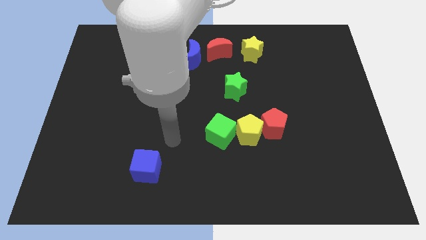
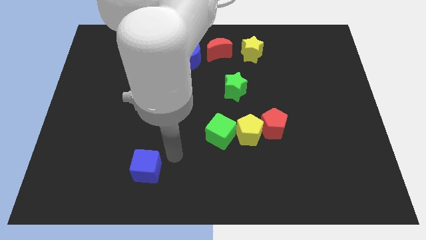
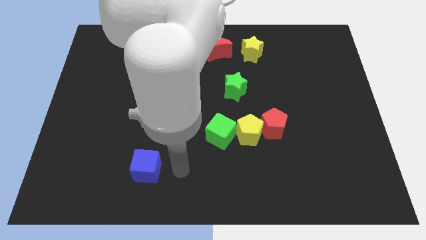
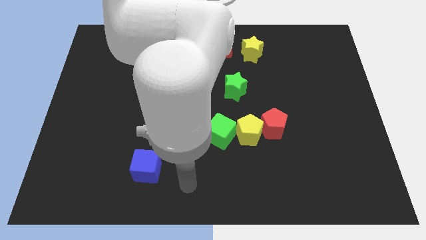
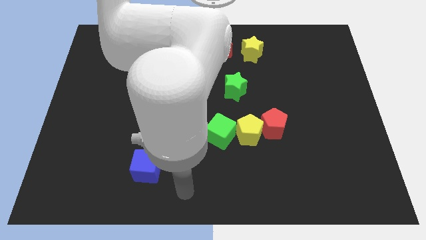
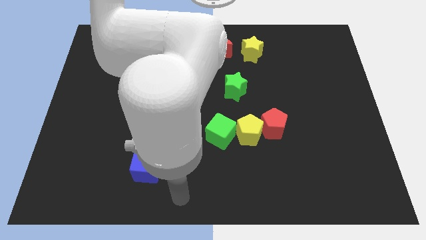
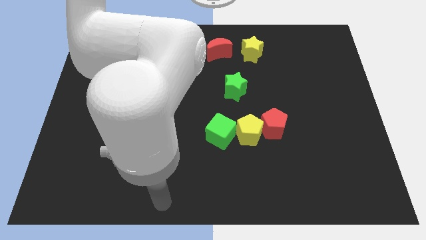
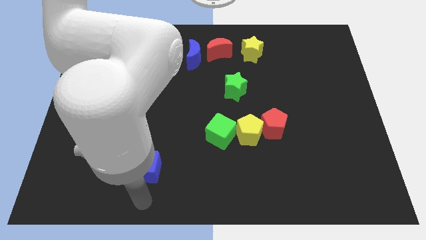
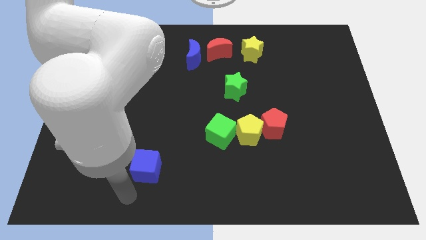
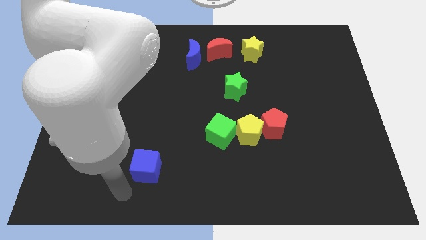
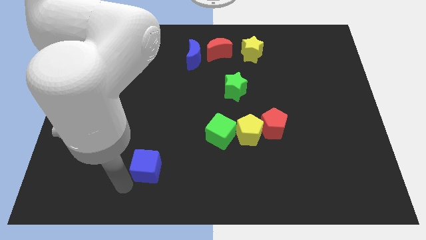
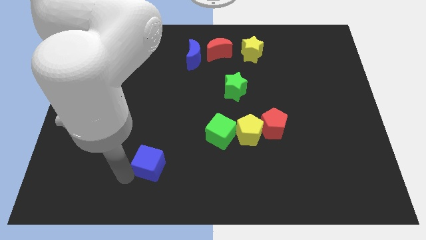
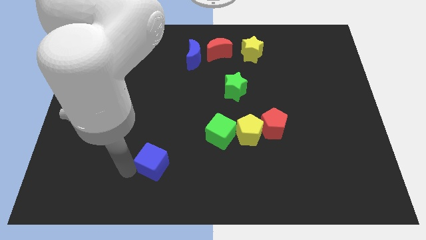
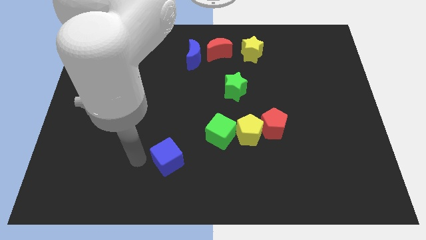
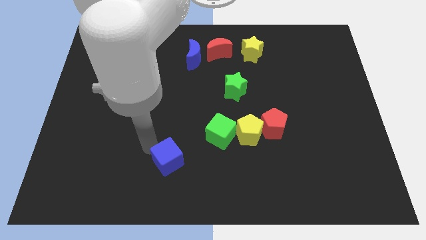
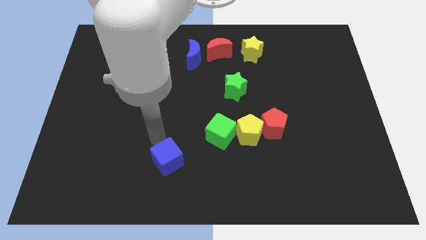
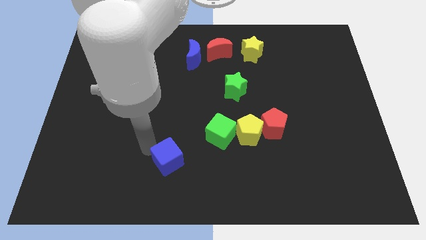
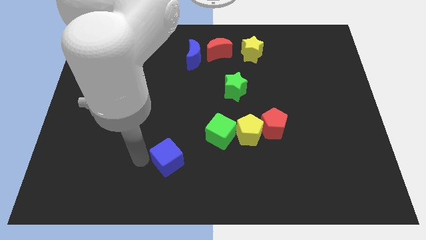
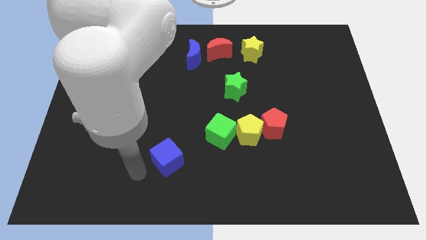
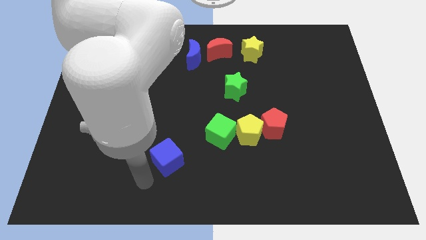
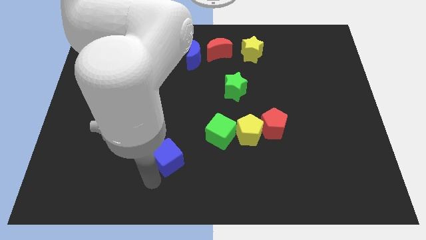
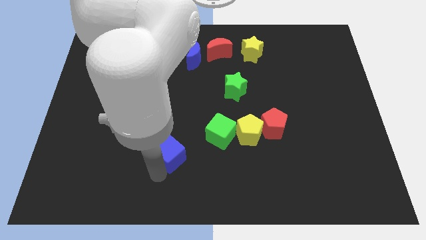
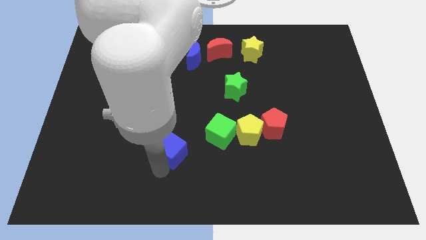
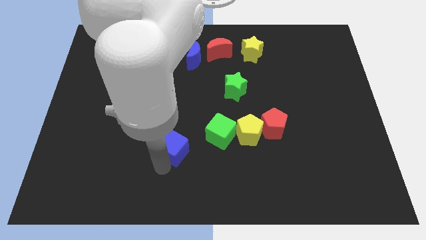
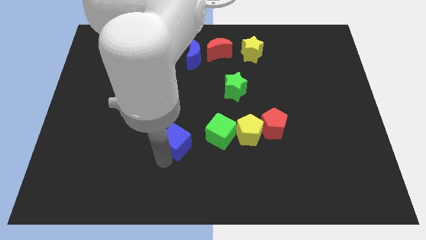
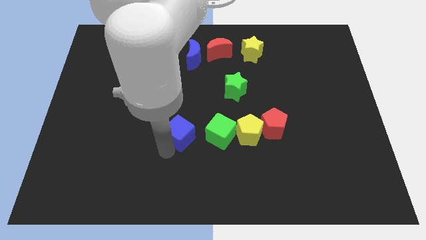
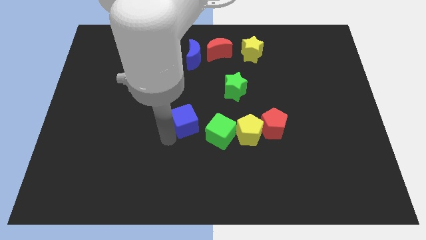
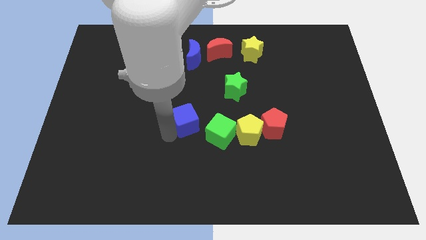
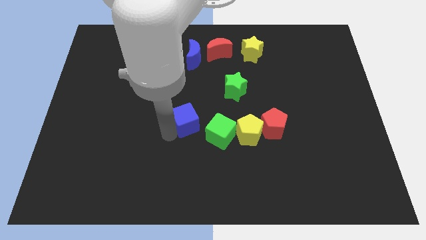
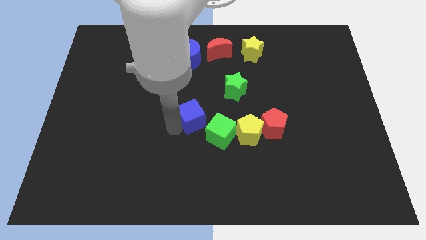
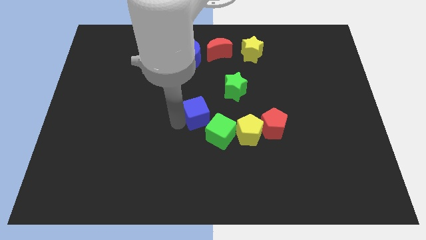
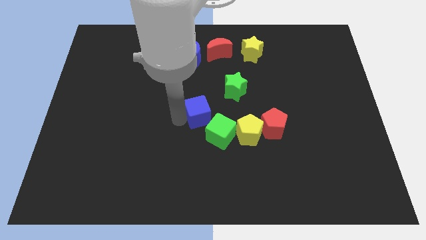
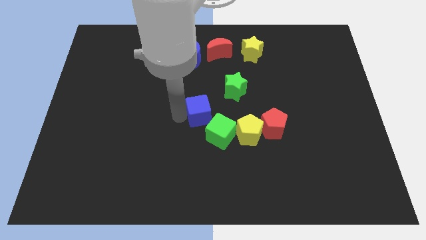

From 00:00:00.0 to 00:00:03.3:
move the blue cube slightly towards the center of the board

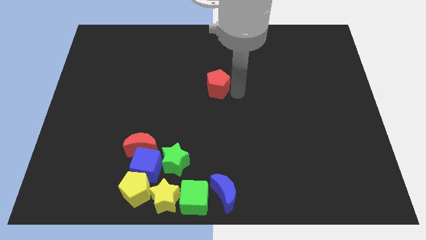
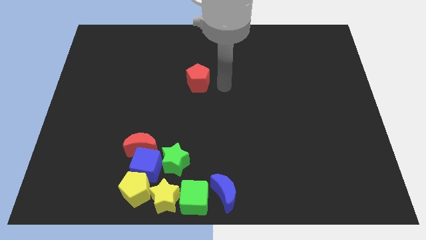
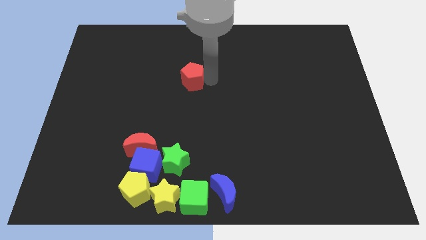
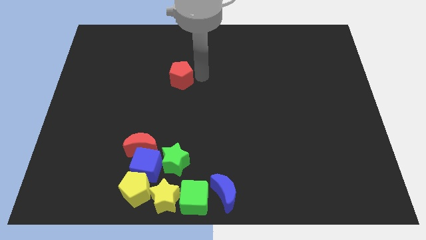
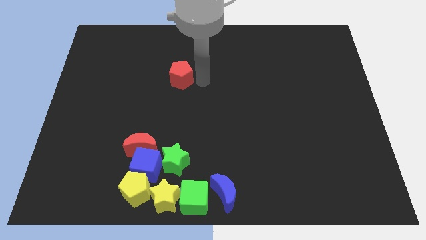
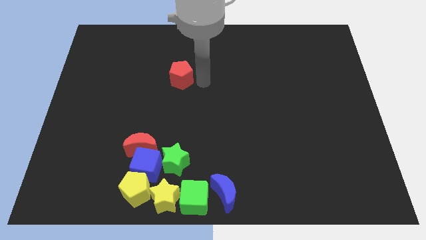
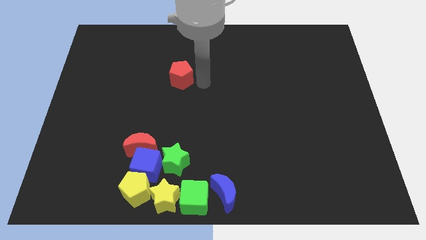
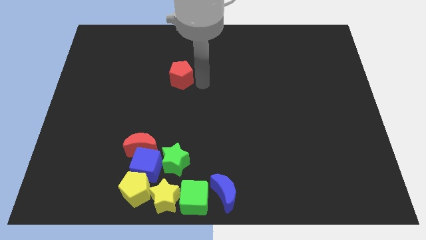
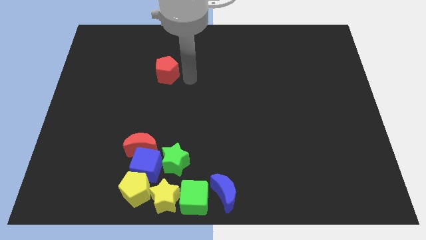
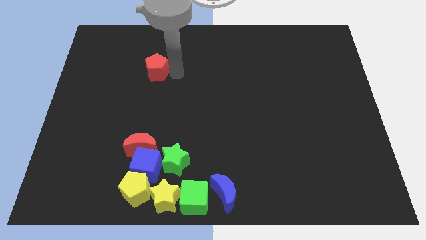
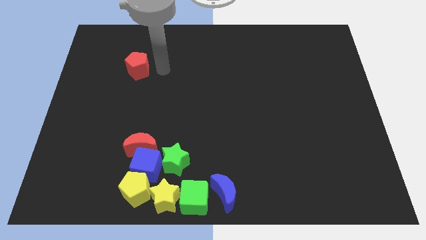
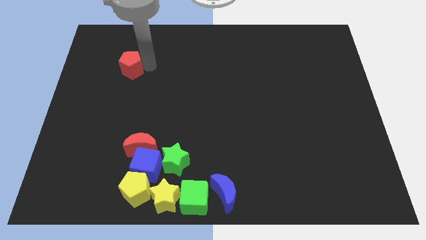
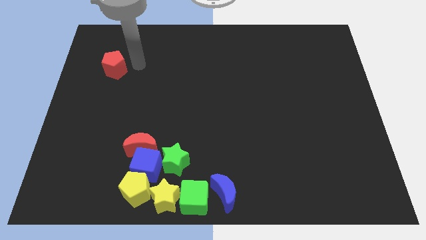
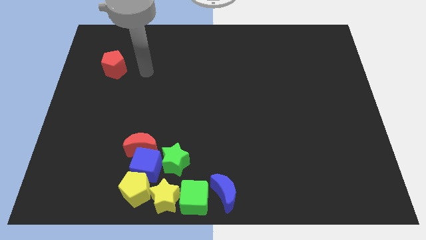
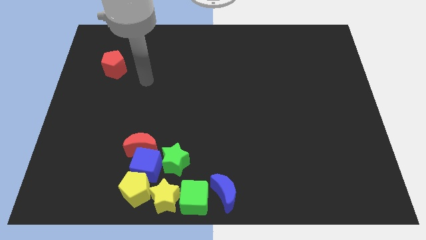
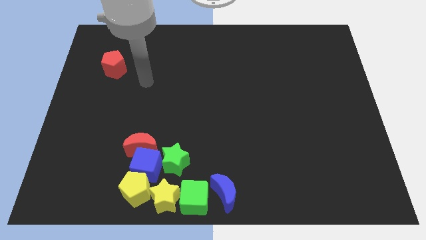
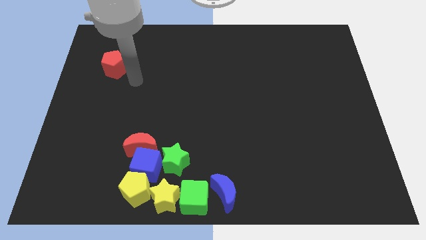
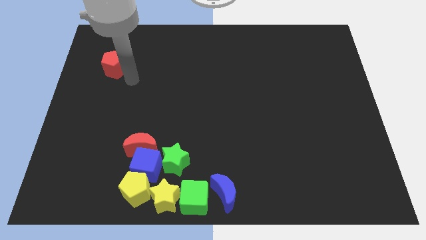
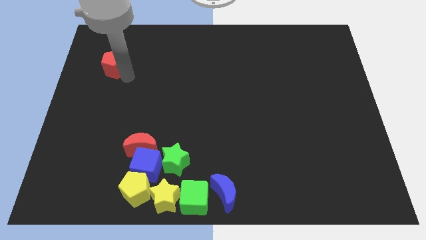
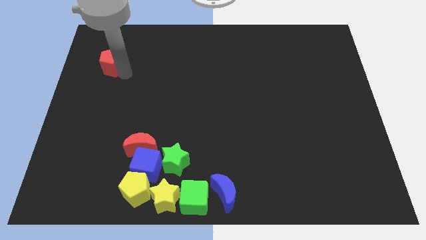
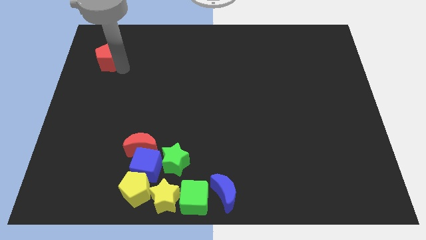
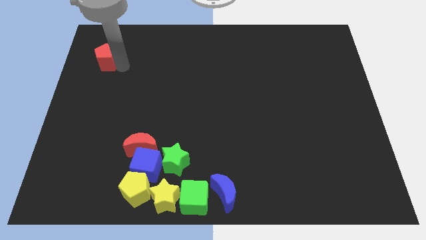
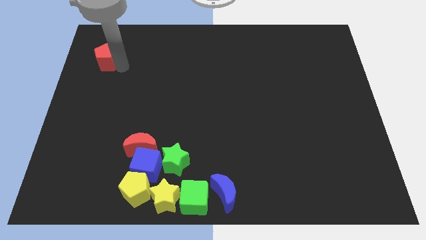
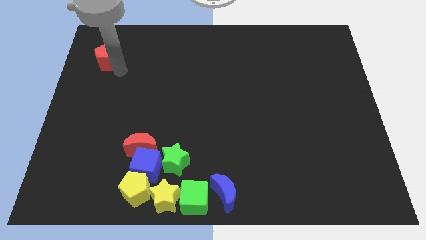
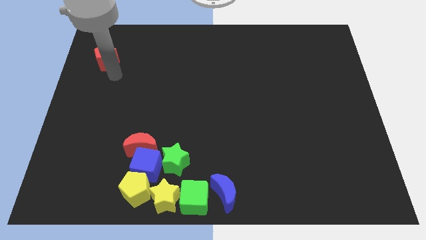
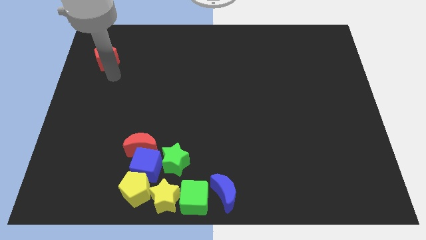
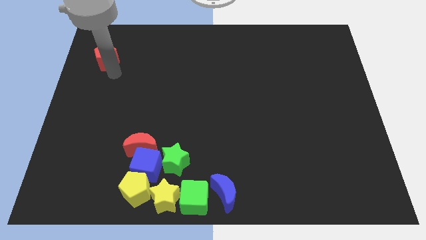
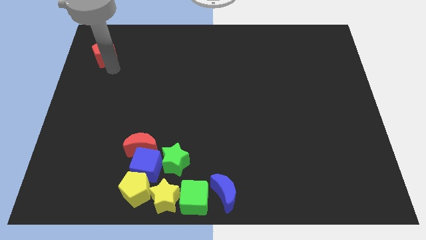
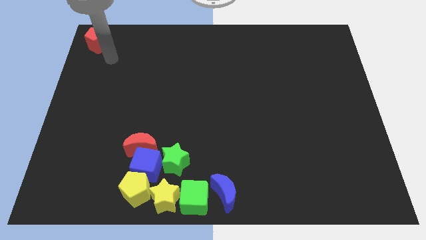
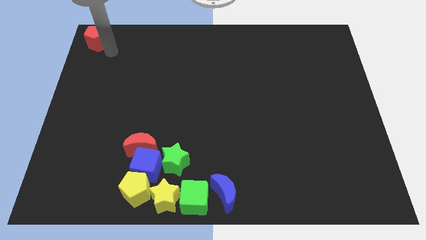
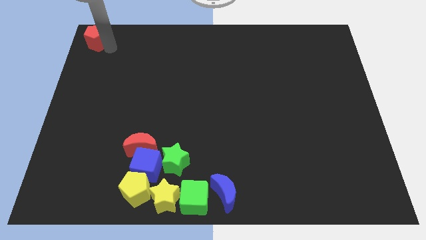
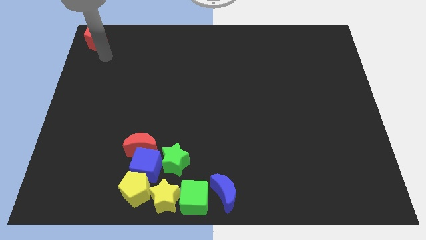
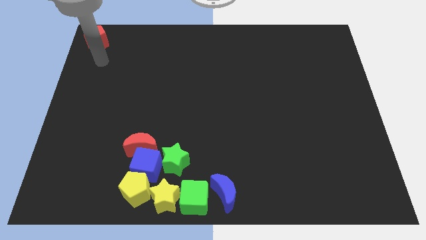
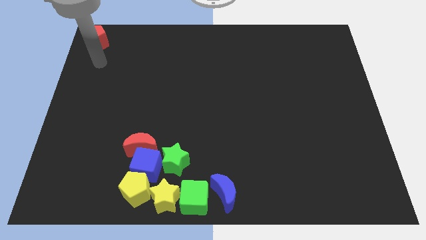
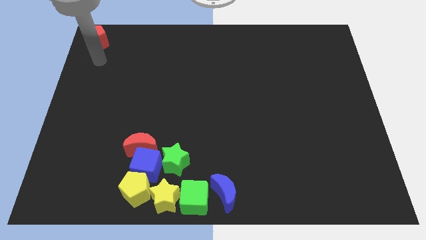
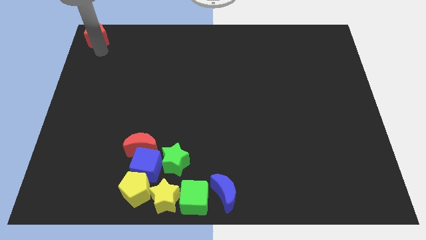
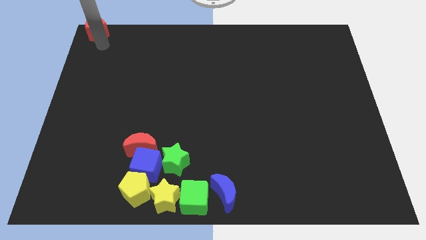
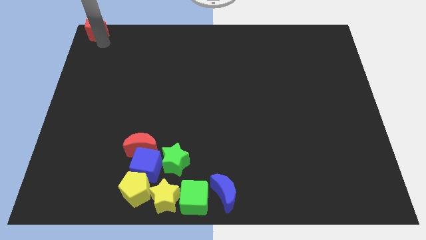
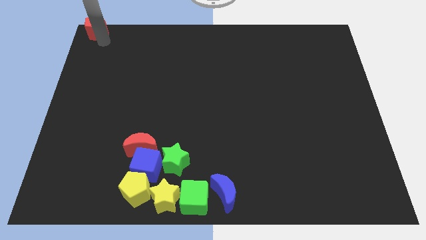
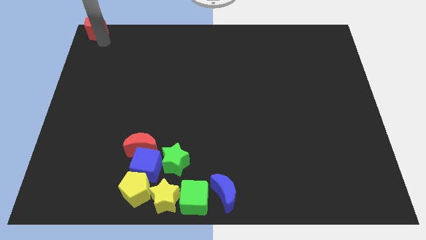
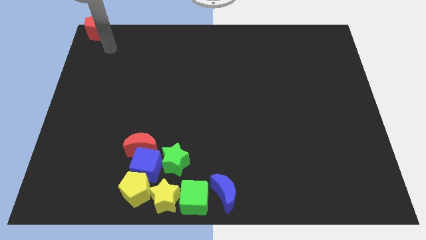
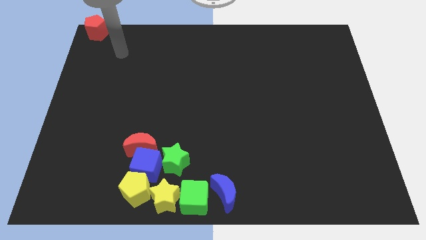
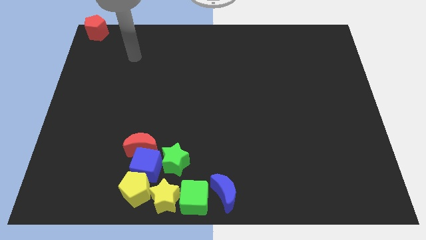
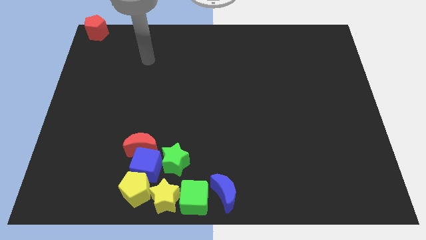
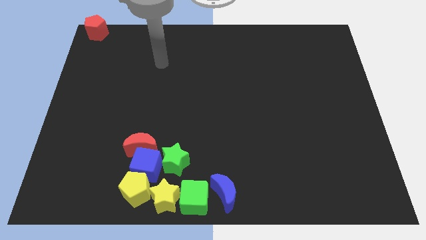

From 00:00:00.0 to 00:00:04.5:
place the red pentagon at the top left corner

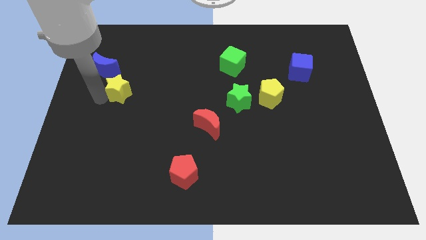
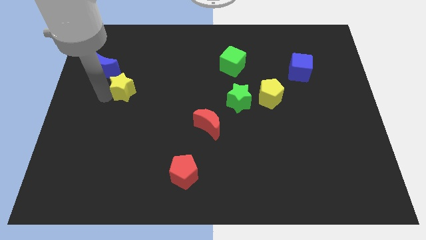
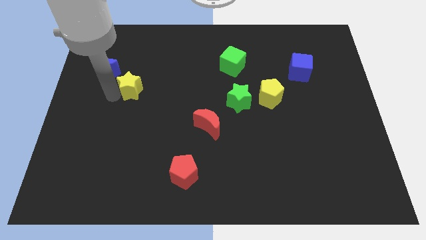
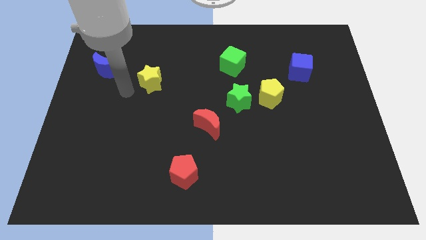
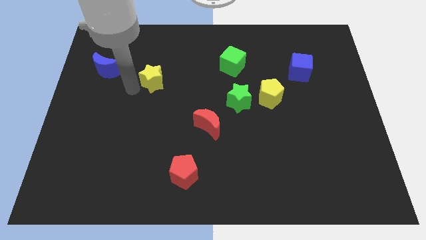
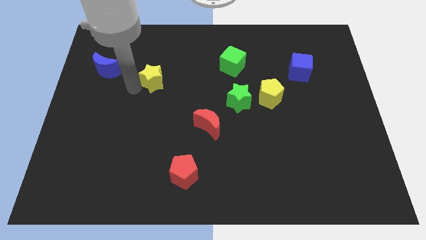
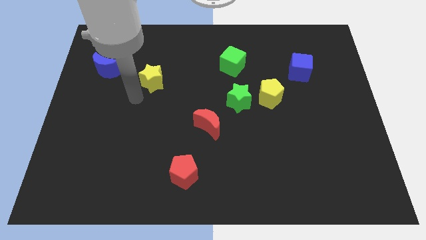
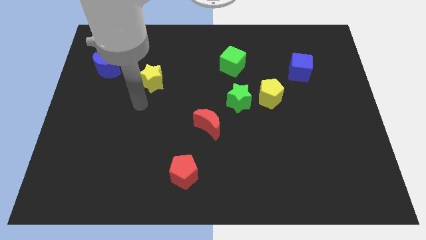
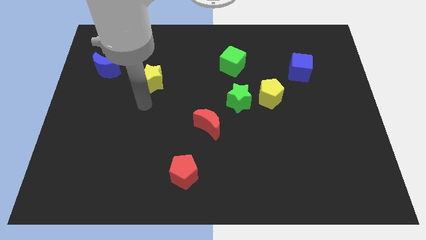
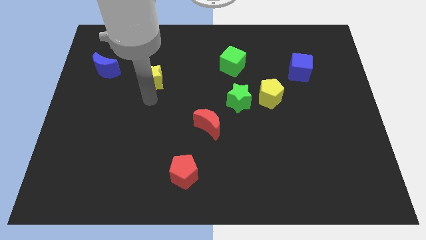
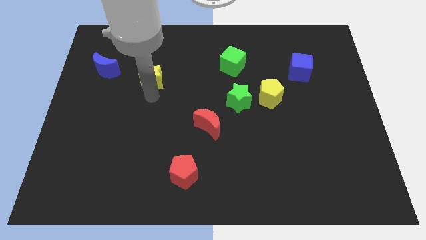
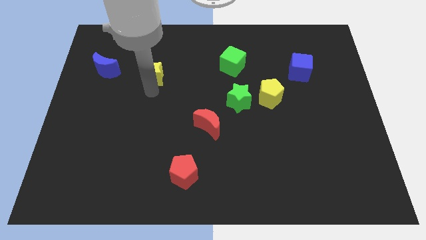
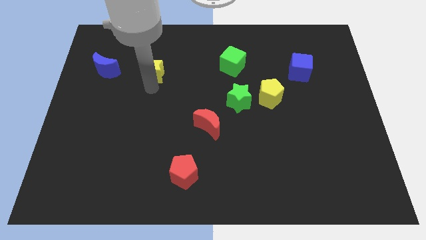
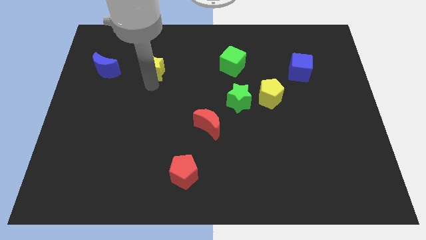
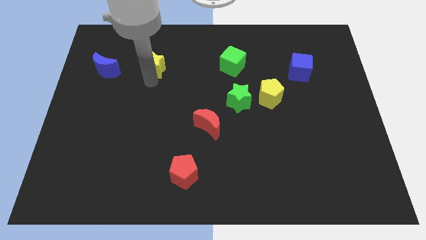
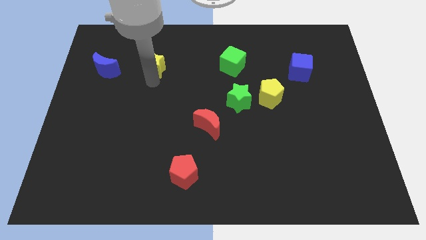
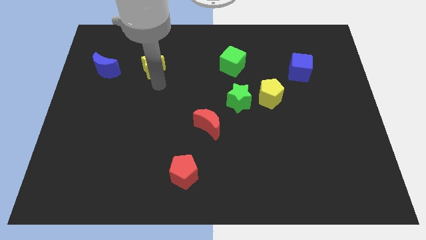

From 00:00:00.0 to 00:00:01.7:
place the yellow star in between the green cube and blue moon
